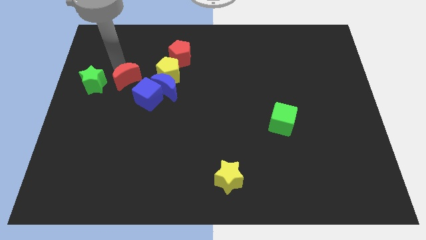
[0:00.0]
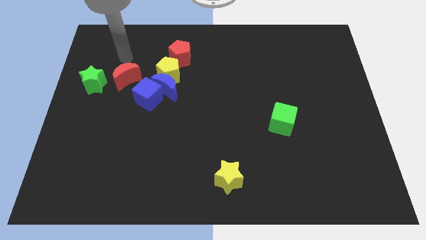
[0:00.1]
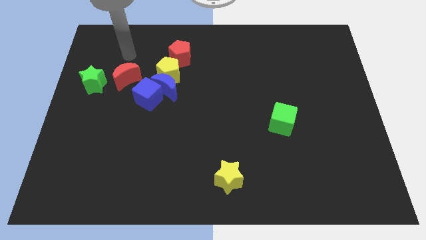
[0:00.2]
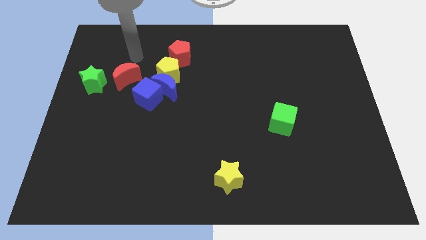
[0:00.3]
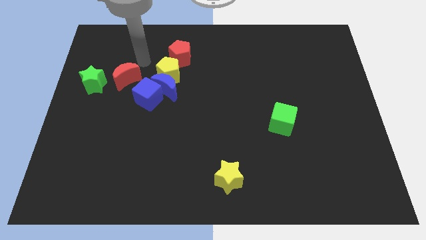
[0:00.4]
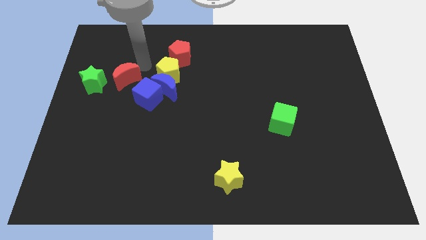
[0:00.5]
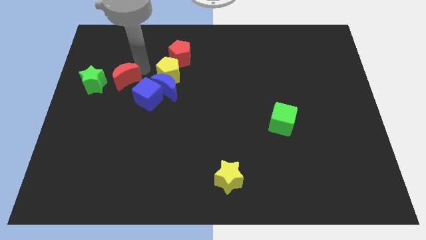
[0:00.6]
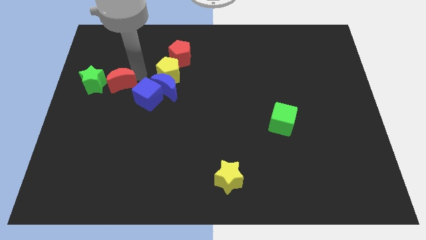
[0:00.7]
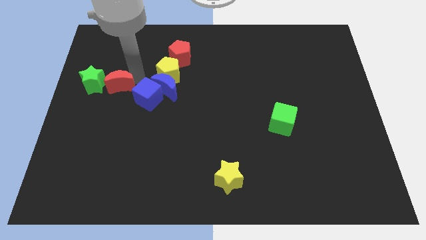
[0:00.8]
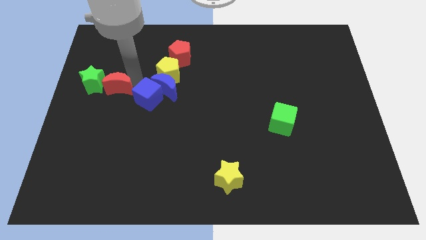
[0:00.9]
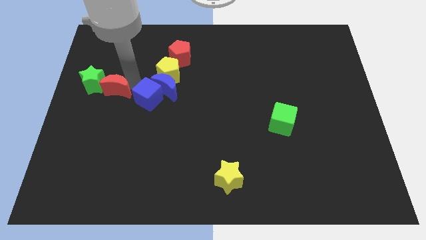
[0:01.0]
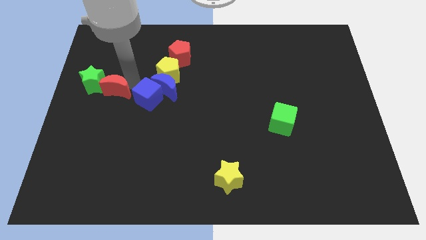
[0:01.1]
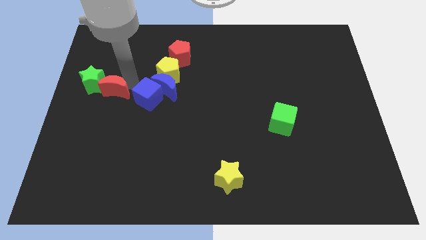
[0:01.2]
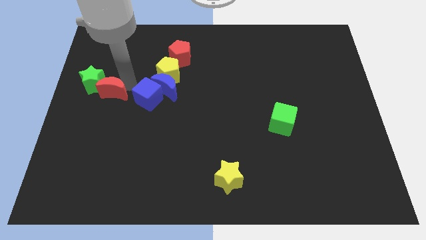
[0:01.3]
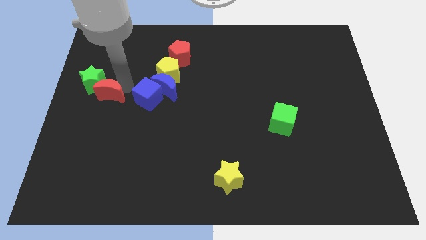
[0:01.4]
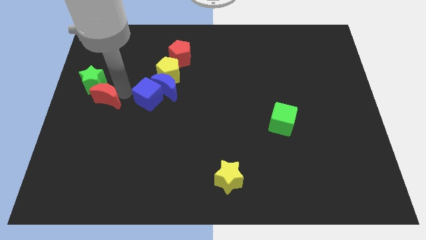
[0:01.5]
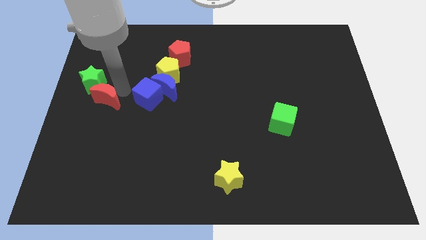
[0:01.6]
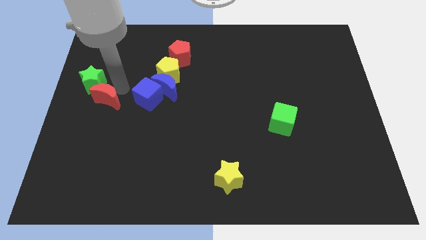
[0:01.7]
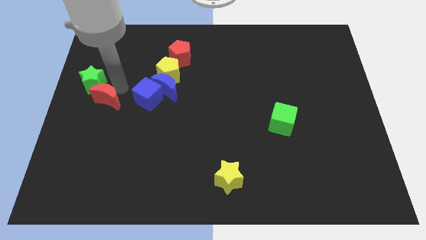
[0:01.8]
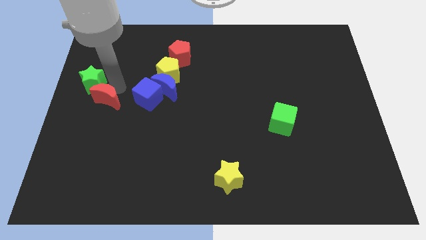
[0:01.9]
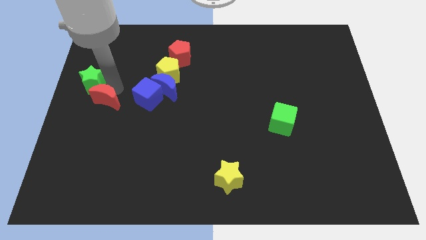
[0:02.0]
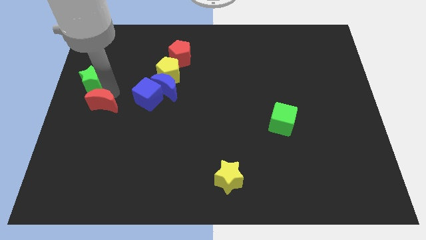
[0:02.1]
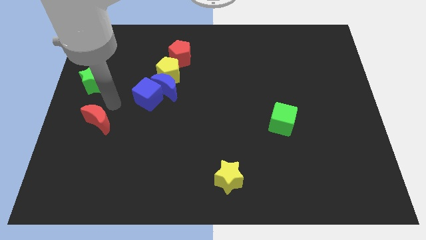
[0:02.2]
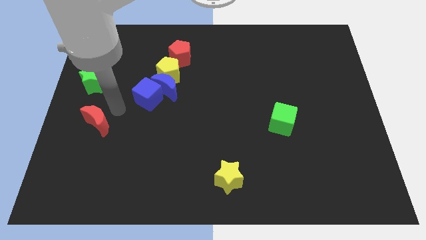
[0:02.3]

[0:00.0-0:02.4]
push the red crescent to the bottom of the green star

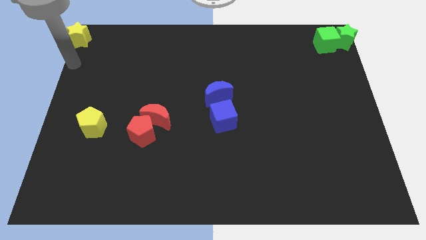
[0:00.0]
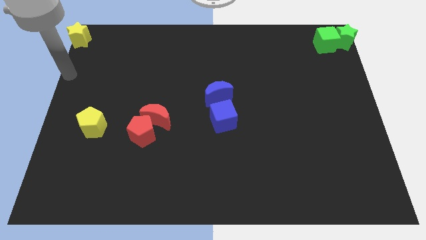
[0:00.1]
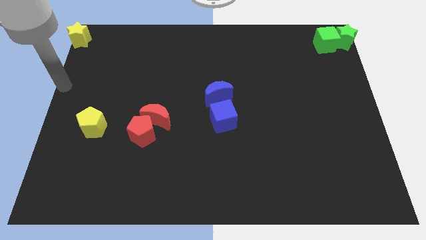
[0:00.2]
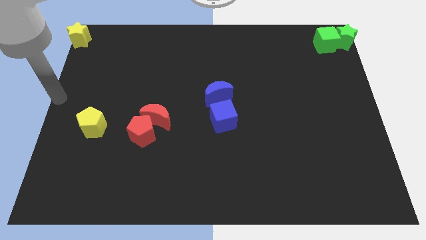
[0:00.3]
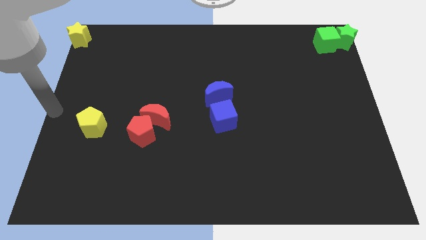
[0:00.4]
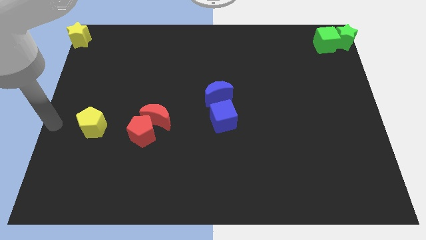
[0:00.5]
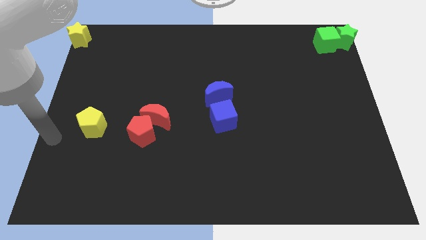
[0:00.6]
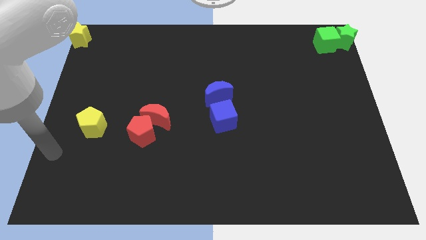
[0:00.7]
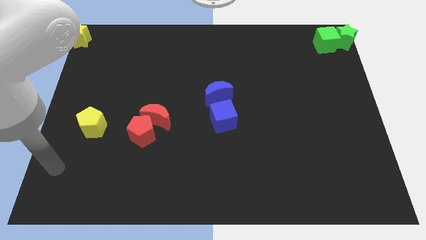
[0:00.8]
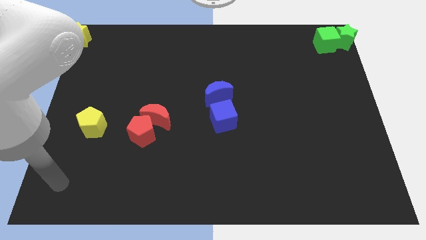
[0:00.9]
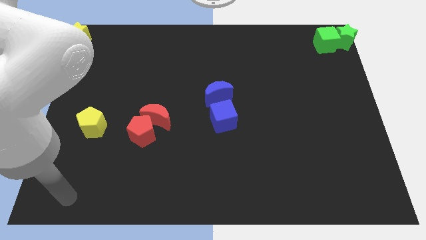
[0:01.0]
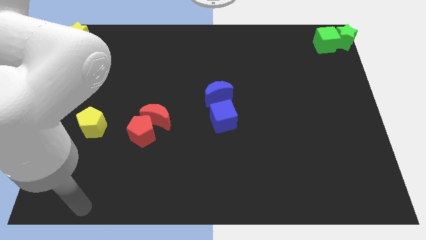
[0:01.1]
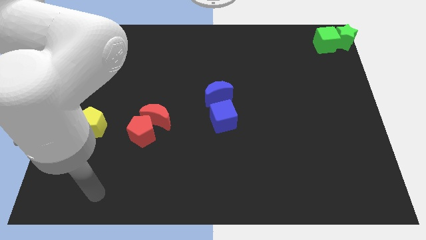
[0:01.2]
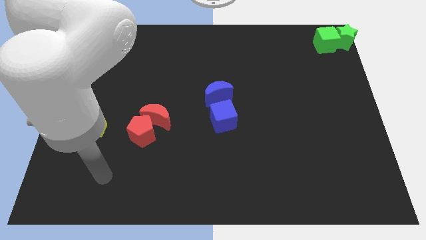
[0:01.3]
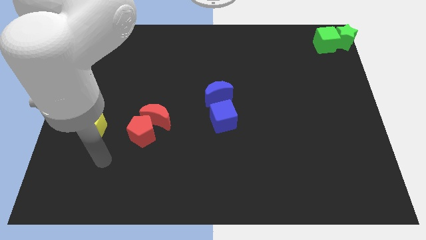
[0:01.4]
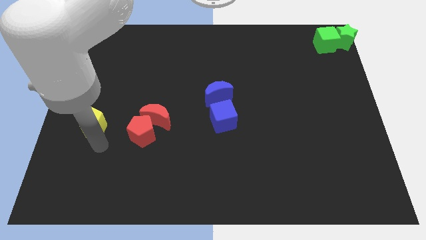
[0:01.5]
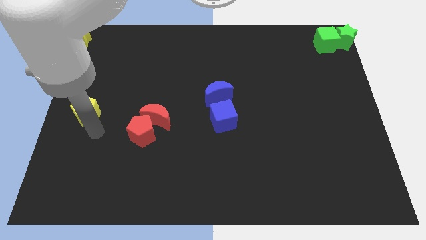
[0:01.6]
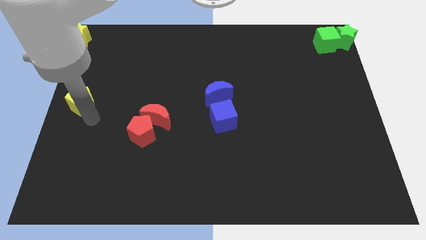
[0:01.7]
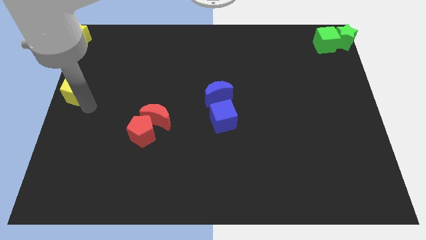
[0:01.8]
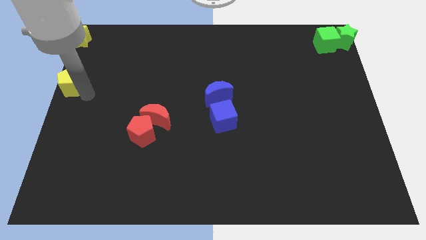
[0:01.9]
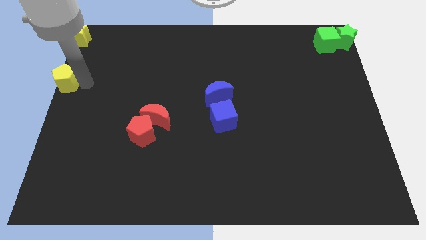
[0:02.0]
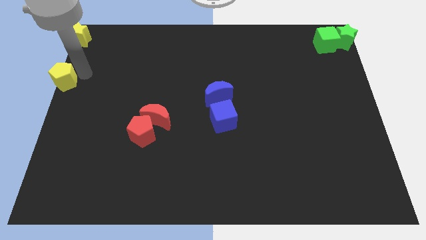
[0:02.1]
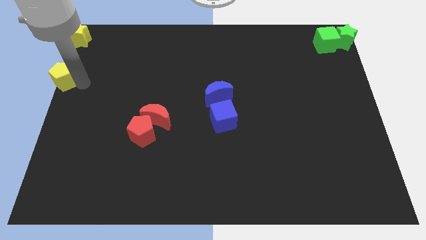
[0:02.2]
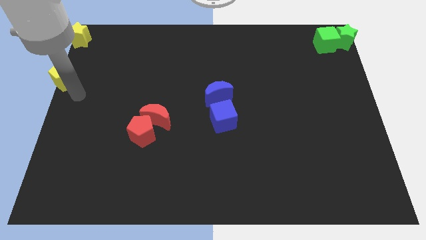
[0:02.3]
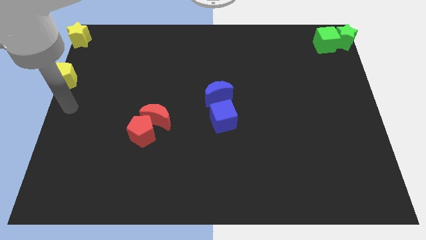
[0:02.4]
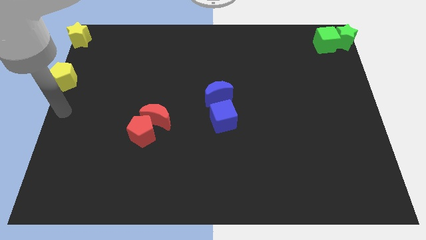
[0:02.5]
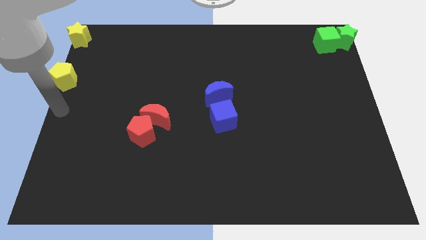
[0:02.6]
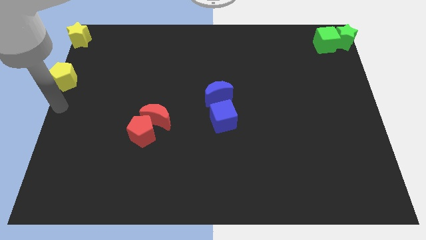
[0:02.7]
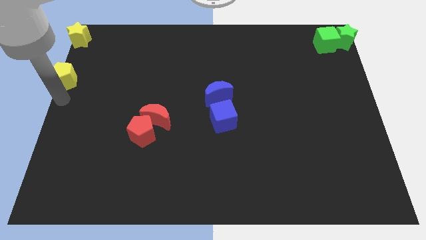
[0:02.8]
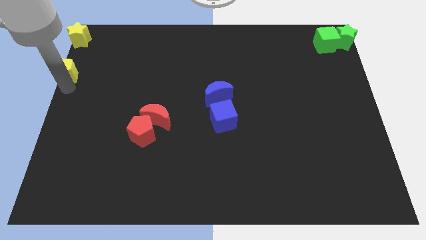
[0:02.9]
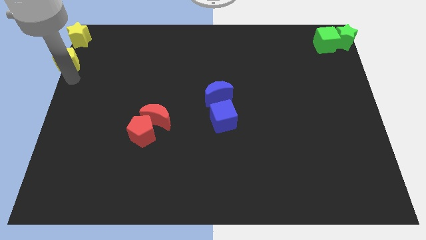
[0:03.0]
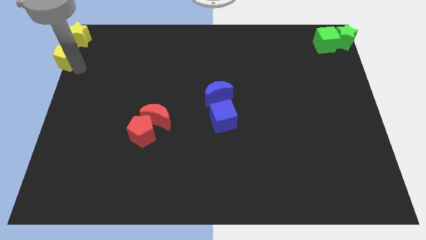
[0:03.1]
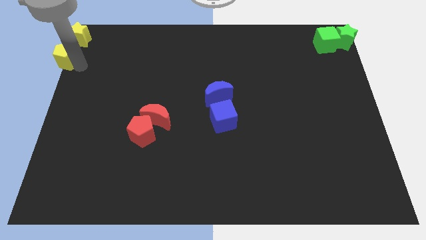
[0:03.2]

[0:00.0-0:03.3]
place the yellow pentagon under the yellow star

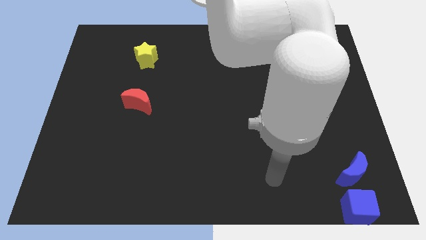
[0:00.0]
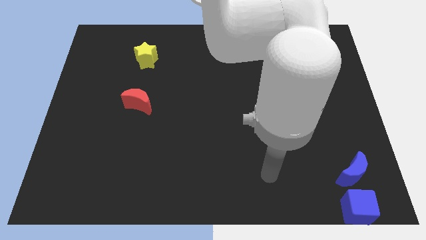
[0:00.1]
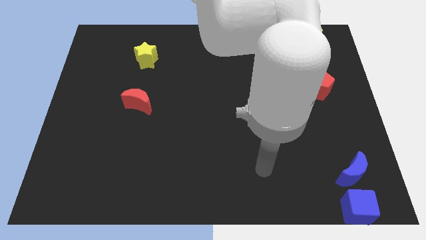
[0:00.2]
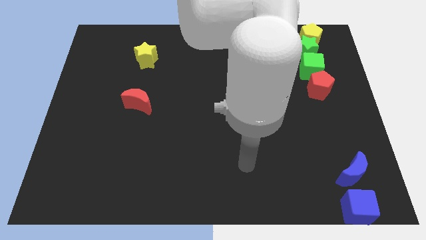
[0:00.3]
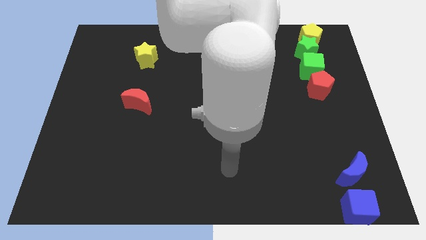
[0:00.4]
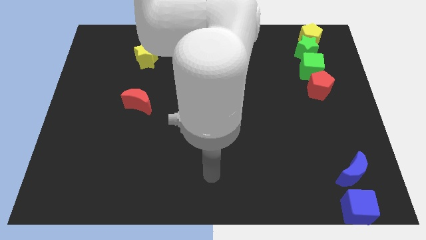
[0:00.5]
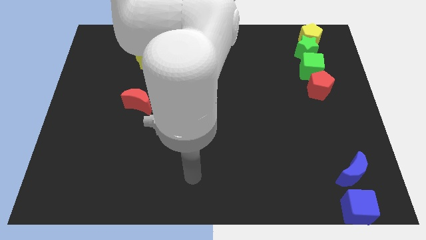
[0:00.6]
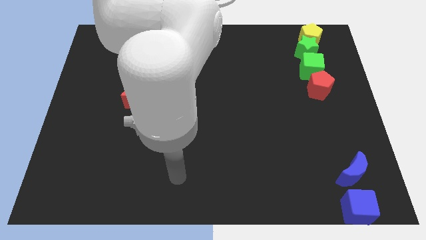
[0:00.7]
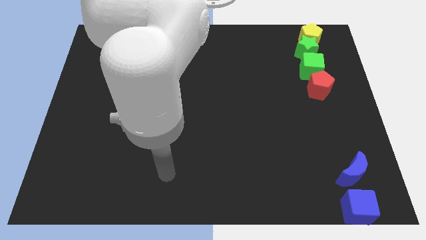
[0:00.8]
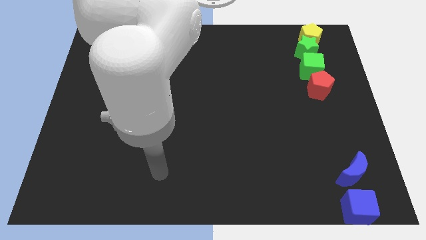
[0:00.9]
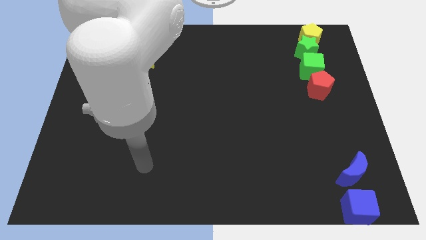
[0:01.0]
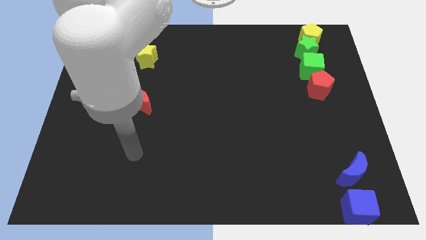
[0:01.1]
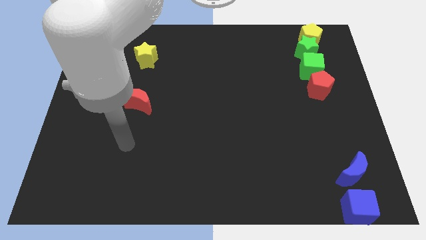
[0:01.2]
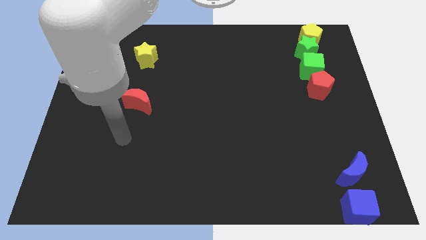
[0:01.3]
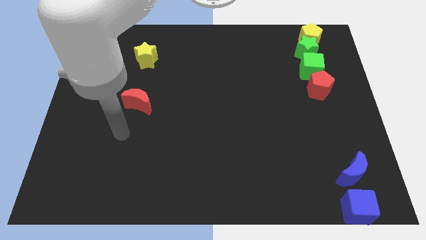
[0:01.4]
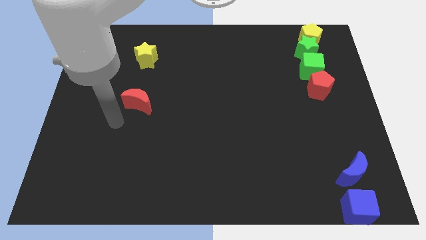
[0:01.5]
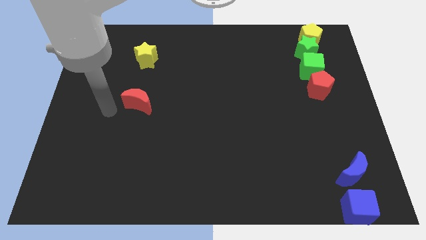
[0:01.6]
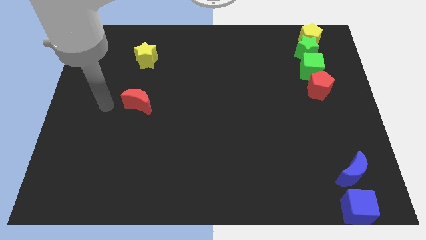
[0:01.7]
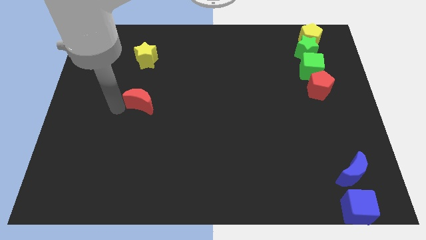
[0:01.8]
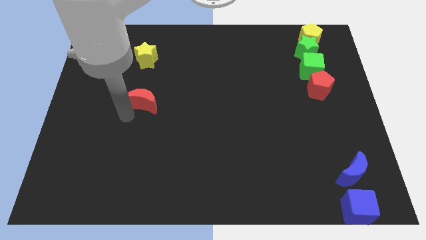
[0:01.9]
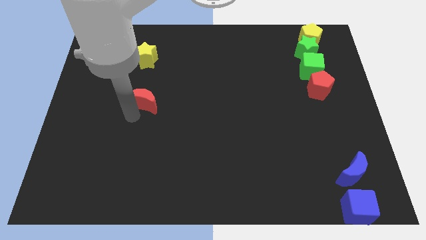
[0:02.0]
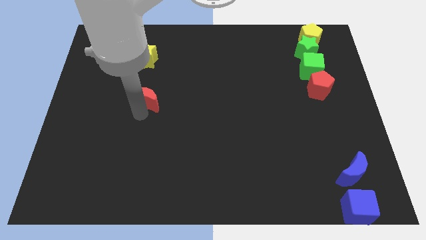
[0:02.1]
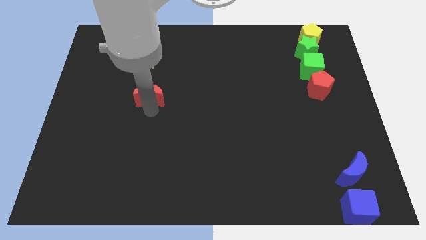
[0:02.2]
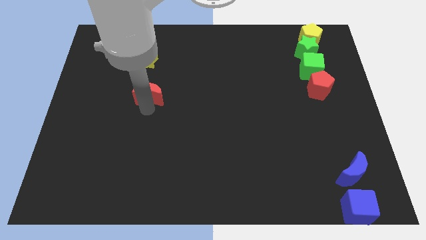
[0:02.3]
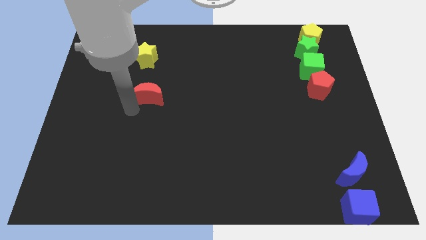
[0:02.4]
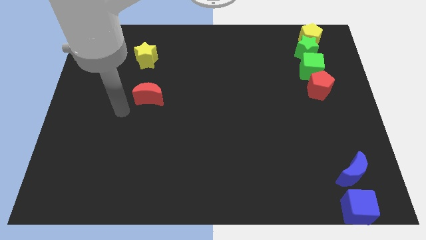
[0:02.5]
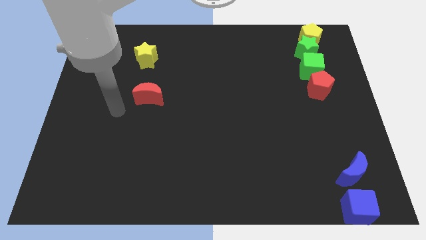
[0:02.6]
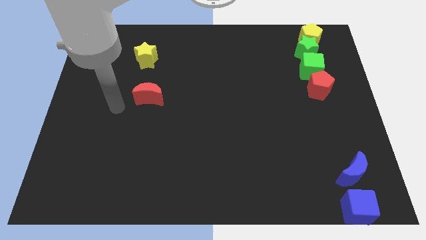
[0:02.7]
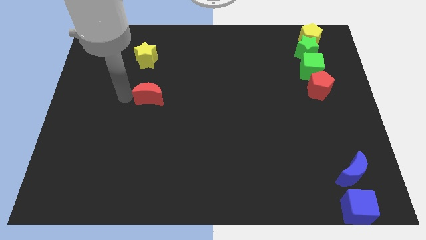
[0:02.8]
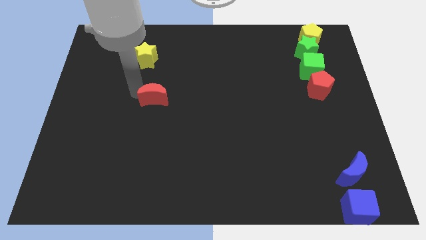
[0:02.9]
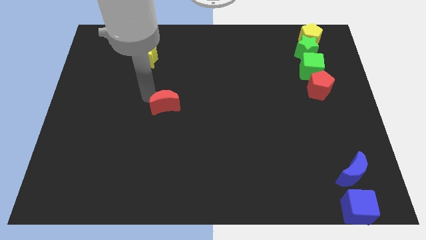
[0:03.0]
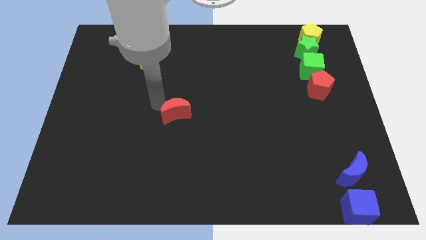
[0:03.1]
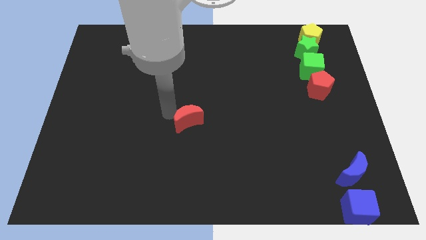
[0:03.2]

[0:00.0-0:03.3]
move your arm towards the red crescent
